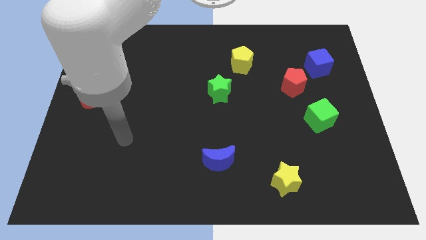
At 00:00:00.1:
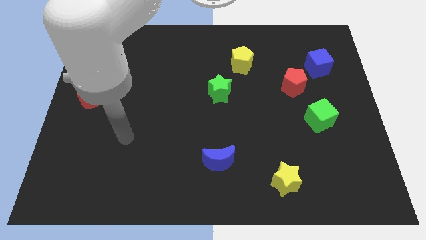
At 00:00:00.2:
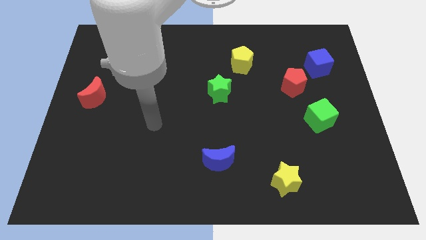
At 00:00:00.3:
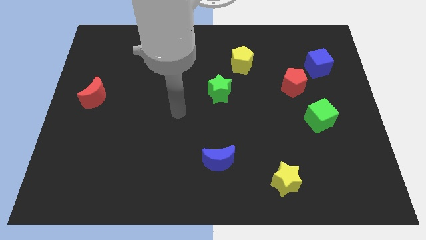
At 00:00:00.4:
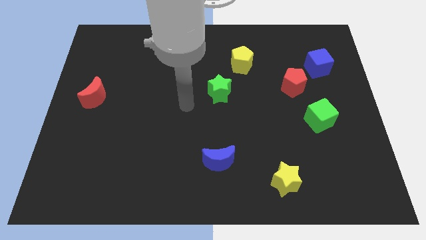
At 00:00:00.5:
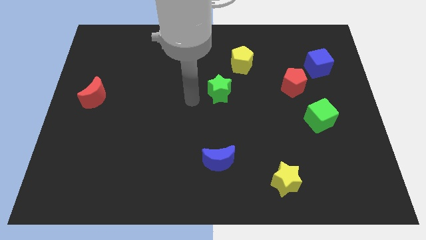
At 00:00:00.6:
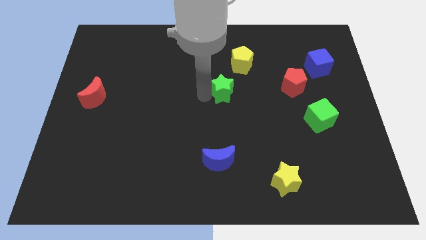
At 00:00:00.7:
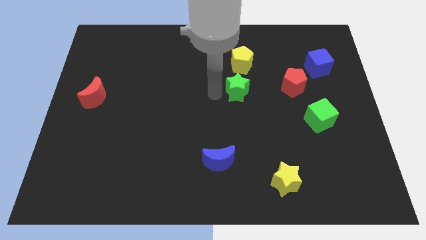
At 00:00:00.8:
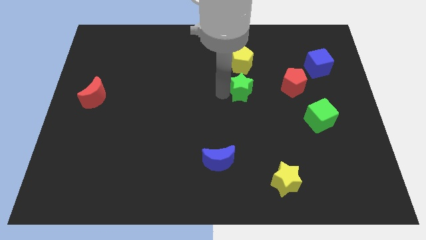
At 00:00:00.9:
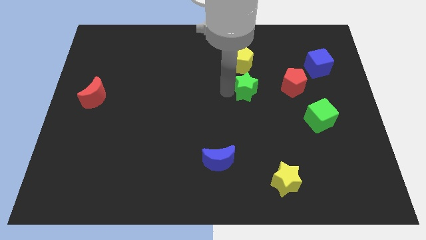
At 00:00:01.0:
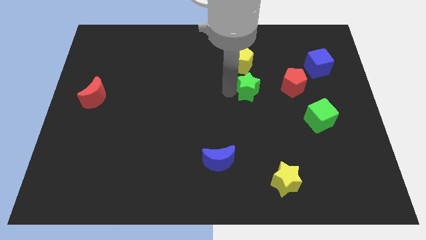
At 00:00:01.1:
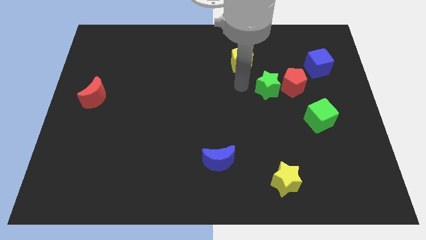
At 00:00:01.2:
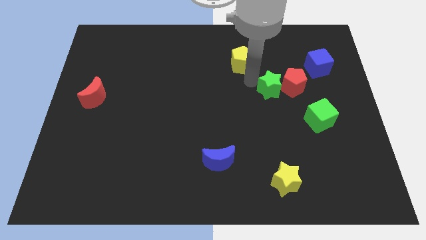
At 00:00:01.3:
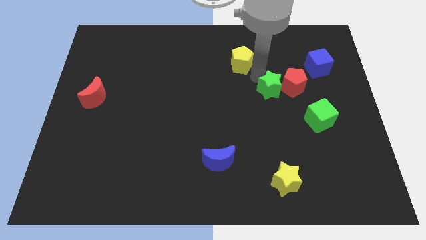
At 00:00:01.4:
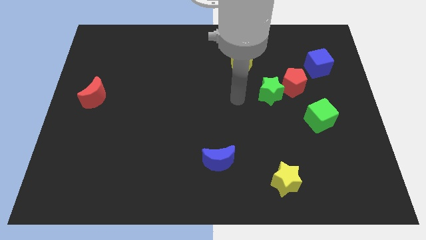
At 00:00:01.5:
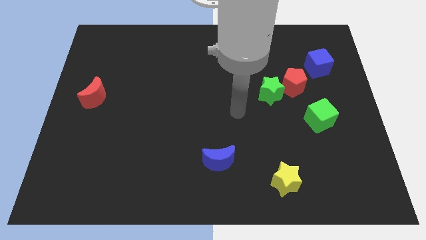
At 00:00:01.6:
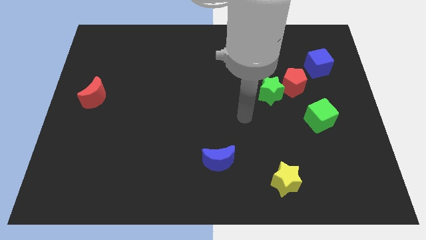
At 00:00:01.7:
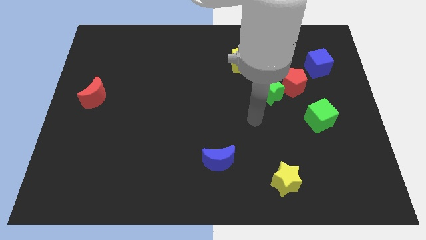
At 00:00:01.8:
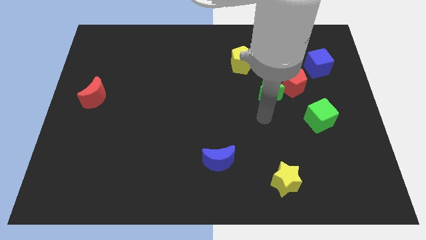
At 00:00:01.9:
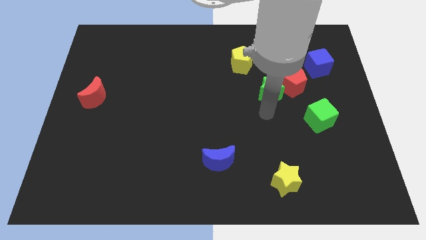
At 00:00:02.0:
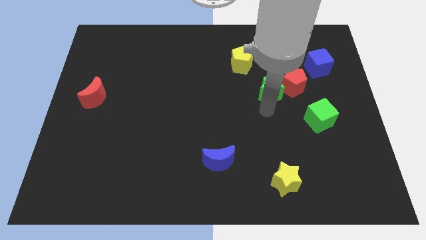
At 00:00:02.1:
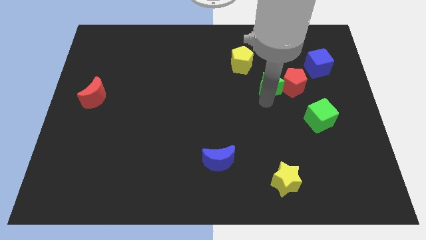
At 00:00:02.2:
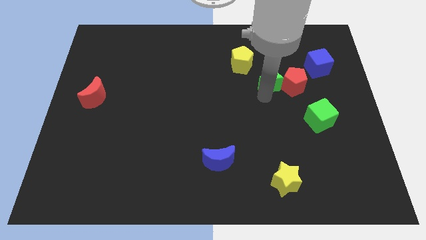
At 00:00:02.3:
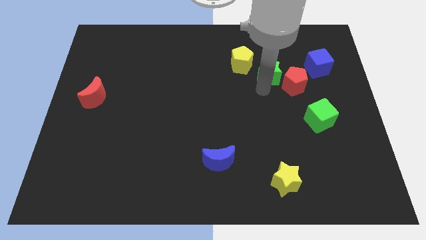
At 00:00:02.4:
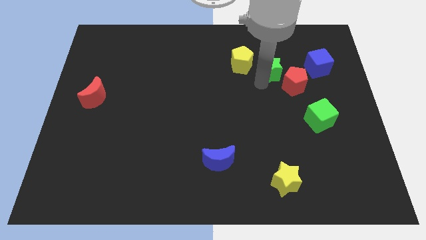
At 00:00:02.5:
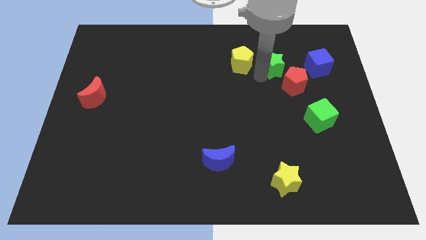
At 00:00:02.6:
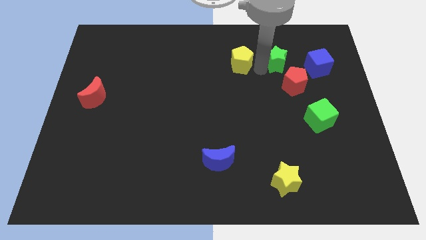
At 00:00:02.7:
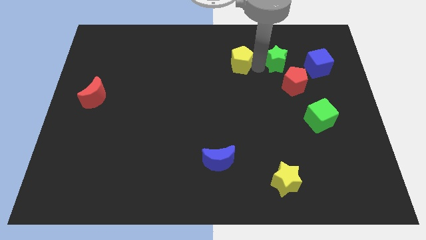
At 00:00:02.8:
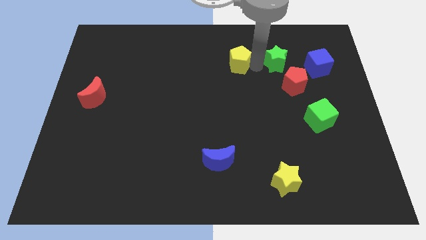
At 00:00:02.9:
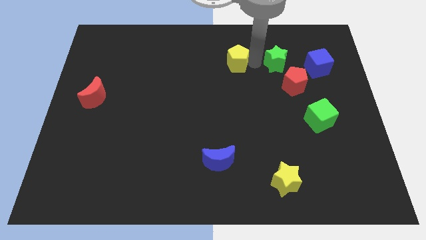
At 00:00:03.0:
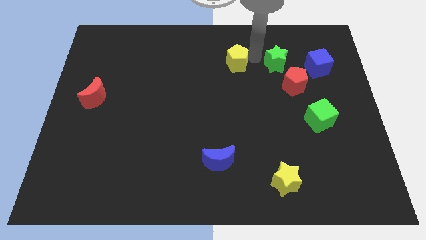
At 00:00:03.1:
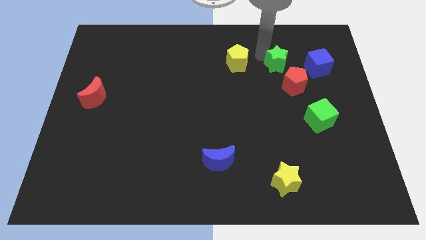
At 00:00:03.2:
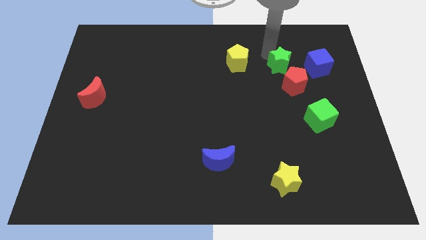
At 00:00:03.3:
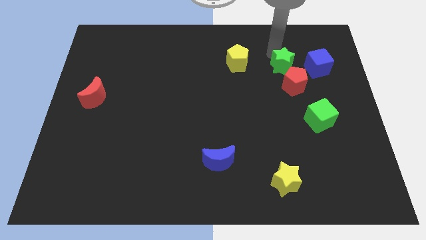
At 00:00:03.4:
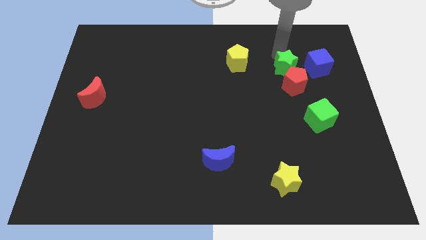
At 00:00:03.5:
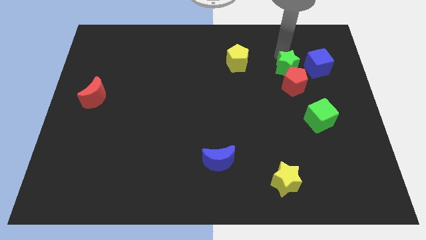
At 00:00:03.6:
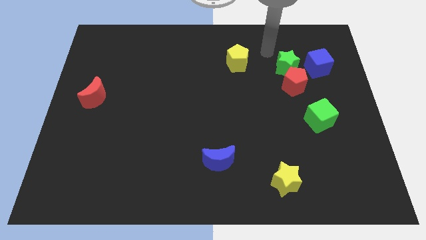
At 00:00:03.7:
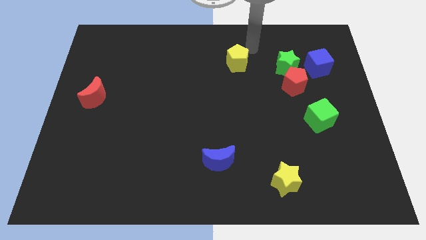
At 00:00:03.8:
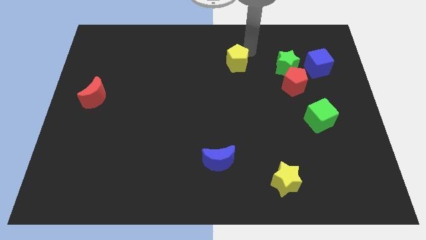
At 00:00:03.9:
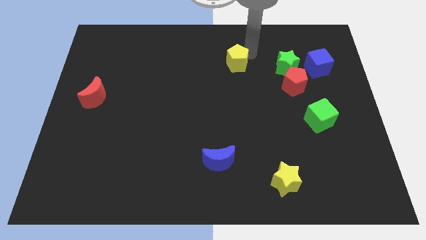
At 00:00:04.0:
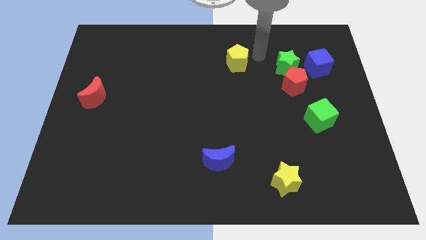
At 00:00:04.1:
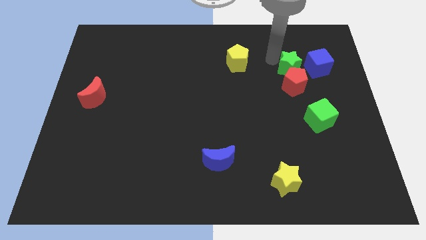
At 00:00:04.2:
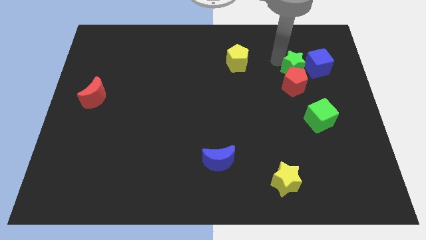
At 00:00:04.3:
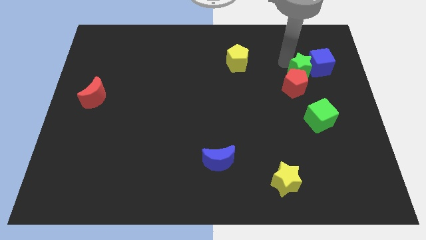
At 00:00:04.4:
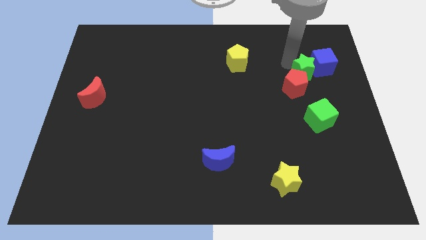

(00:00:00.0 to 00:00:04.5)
move the green star towards the blue cube

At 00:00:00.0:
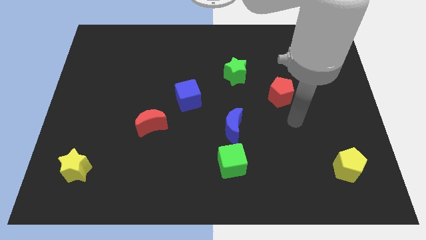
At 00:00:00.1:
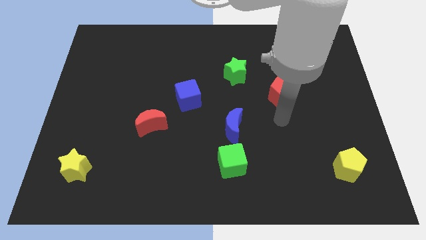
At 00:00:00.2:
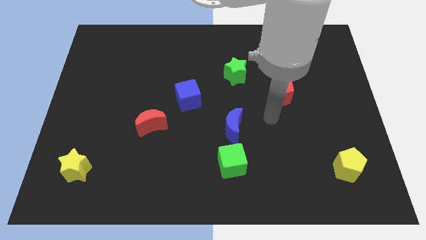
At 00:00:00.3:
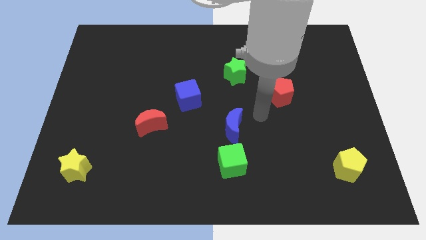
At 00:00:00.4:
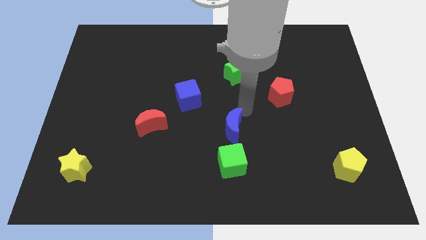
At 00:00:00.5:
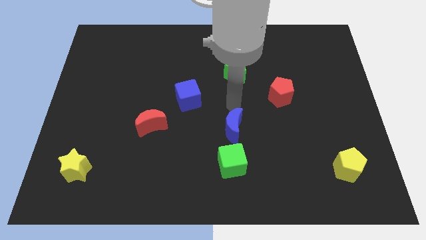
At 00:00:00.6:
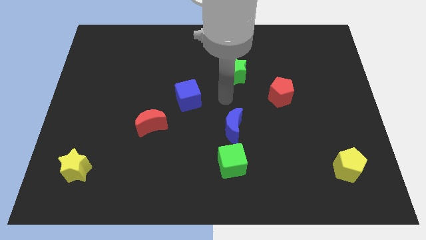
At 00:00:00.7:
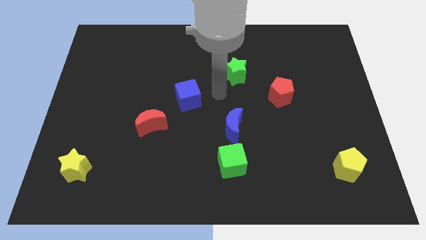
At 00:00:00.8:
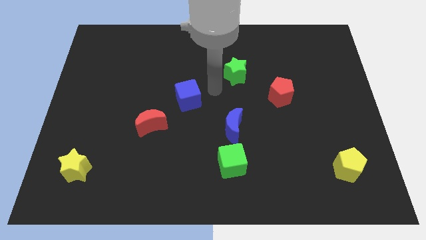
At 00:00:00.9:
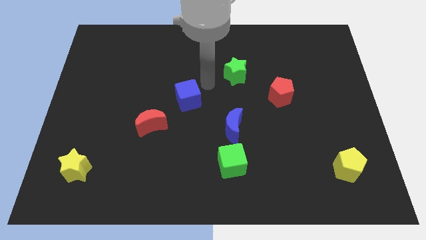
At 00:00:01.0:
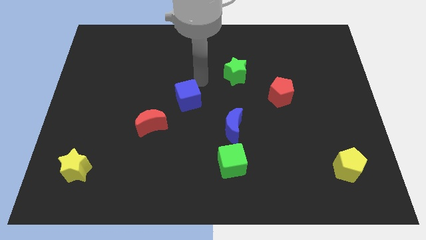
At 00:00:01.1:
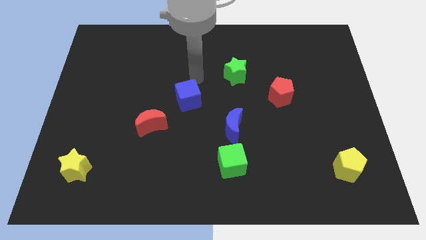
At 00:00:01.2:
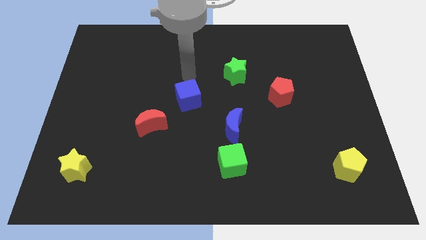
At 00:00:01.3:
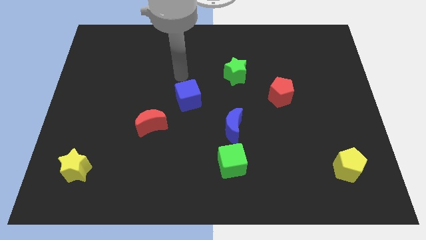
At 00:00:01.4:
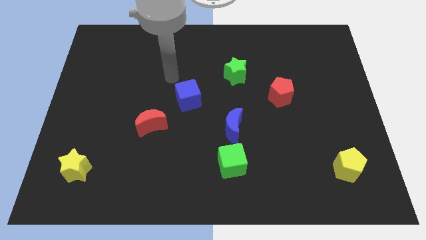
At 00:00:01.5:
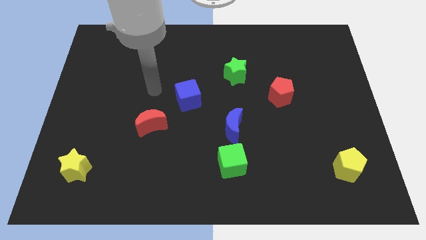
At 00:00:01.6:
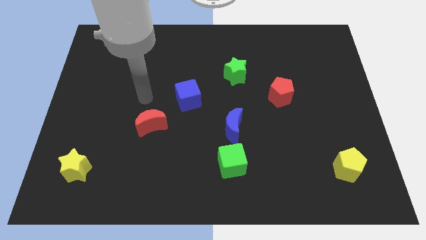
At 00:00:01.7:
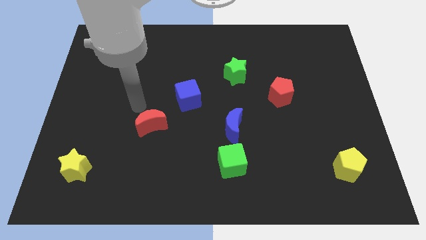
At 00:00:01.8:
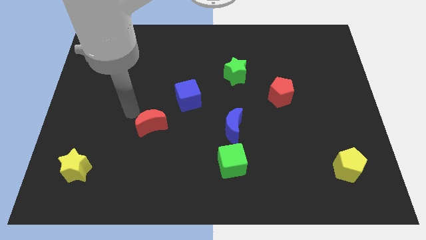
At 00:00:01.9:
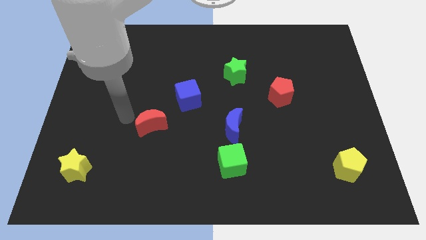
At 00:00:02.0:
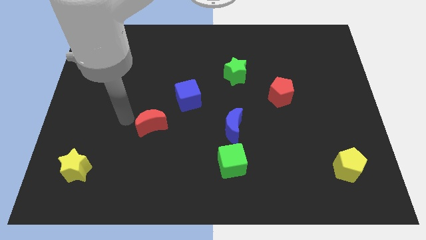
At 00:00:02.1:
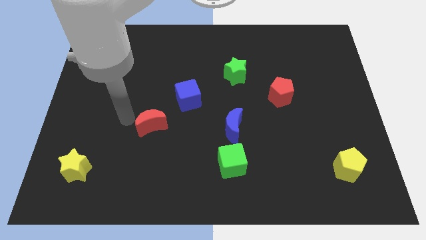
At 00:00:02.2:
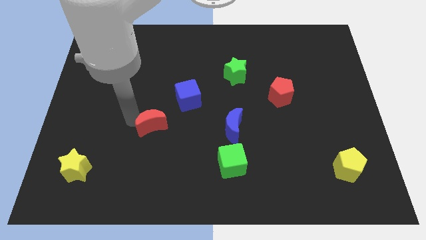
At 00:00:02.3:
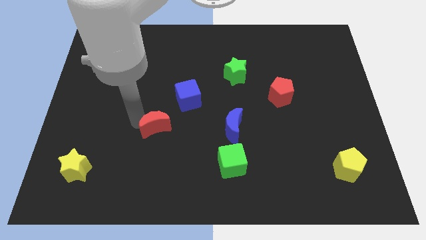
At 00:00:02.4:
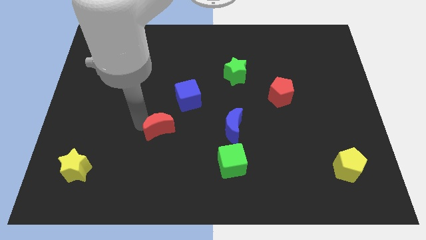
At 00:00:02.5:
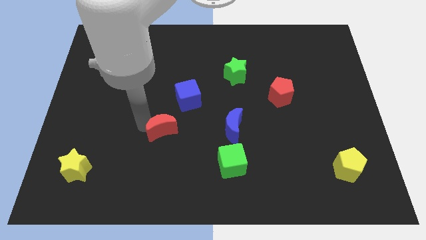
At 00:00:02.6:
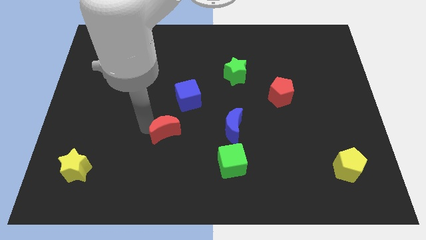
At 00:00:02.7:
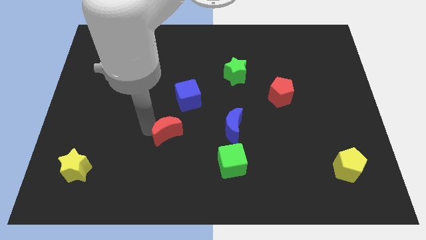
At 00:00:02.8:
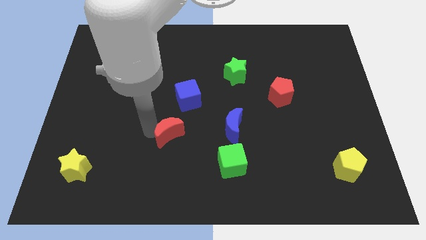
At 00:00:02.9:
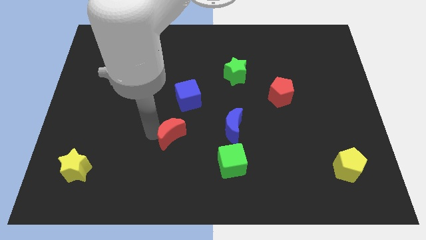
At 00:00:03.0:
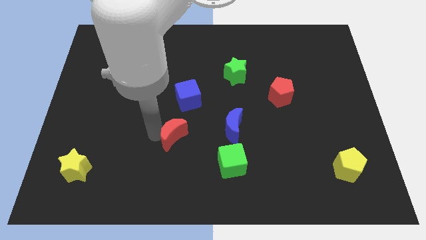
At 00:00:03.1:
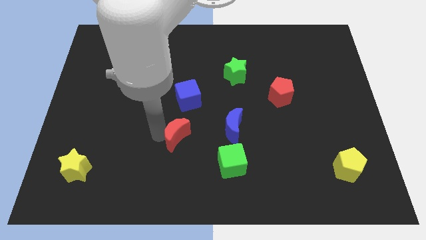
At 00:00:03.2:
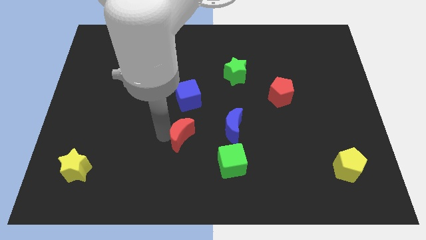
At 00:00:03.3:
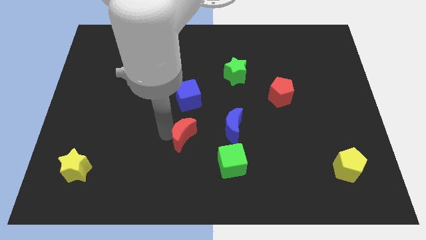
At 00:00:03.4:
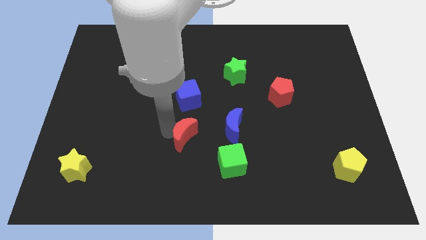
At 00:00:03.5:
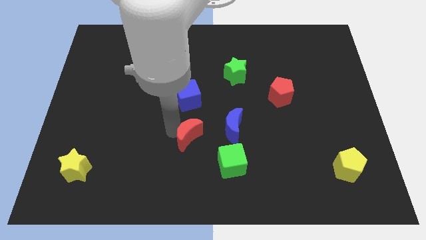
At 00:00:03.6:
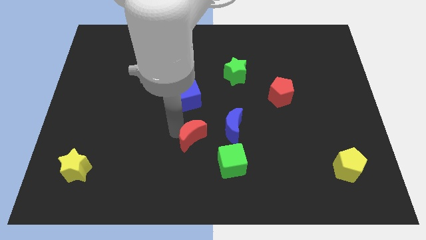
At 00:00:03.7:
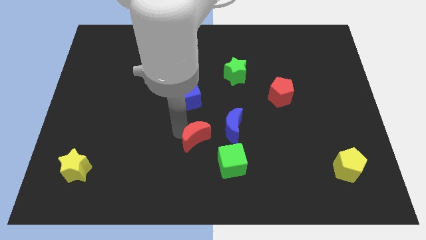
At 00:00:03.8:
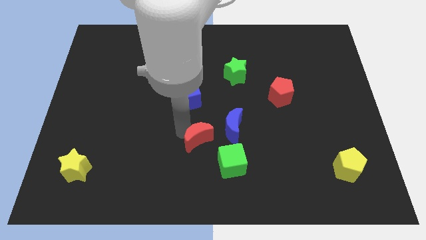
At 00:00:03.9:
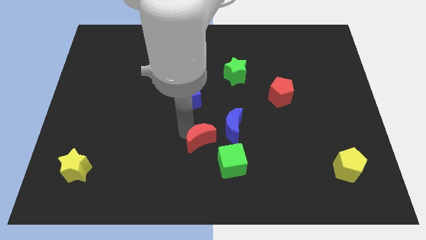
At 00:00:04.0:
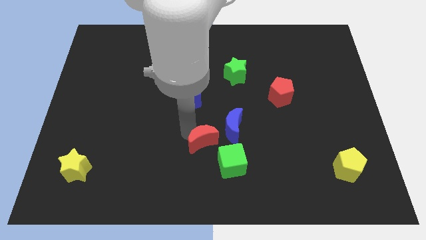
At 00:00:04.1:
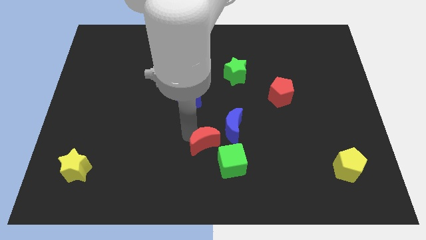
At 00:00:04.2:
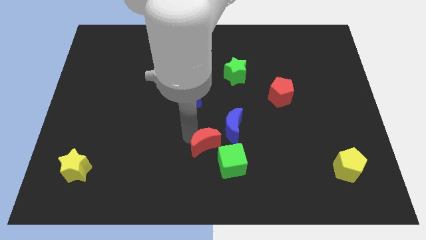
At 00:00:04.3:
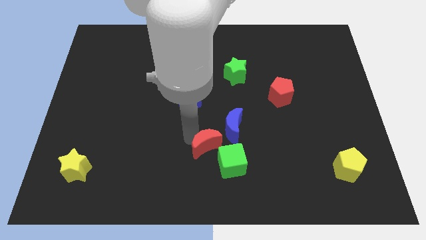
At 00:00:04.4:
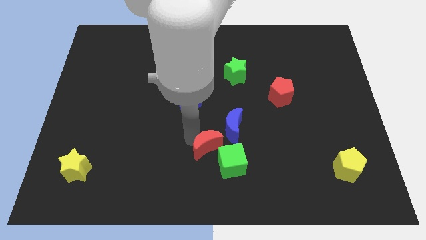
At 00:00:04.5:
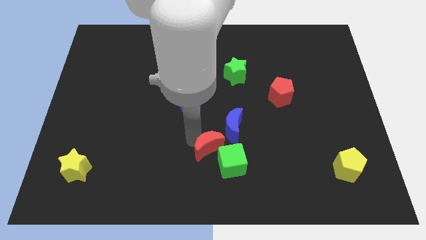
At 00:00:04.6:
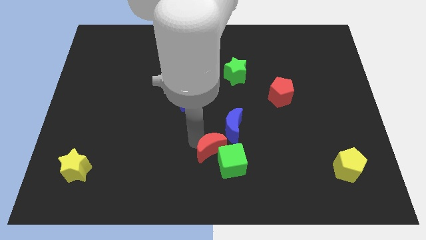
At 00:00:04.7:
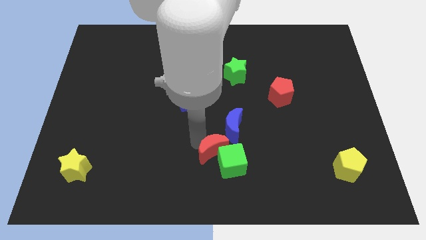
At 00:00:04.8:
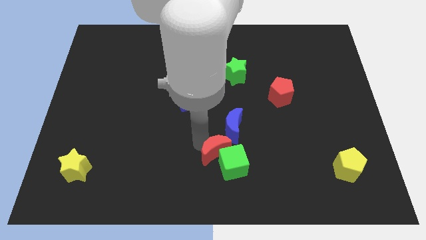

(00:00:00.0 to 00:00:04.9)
push the red moon to the green cube
